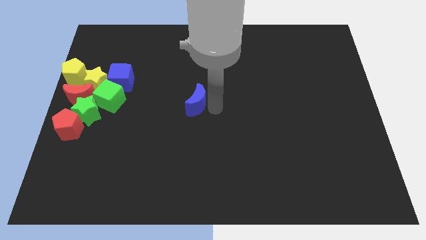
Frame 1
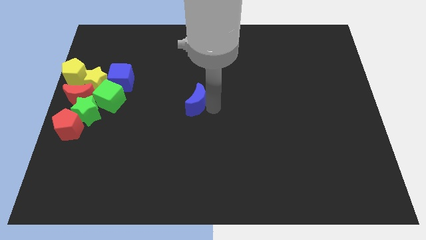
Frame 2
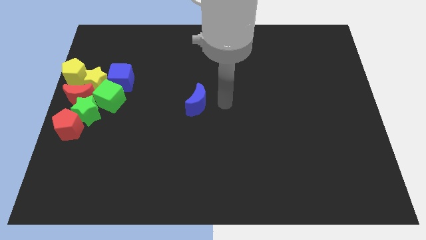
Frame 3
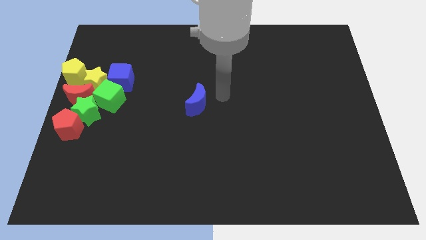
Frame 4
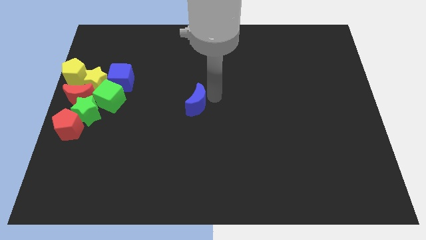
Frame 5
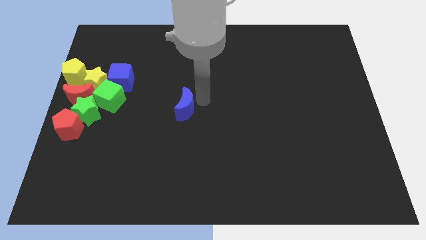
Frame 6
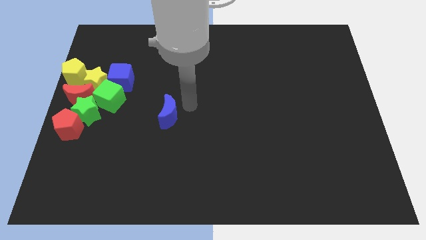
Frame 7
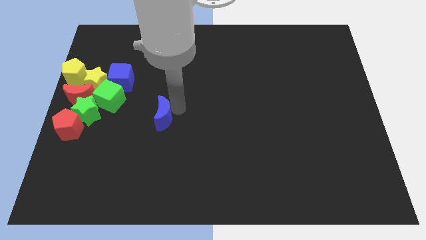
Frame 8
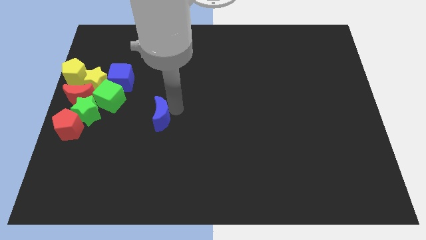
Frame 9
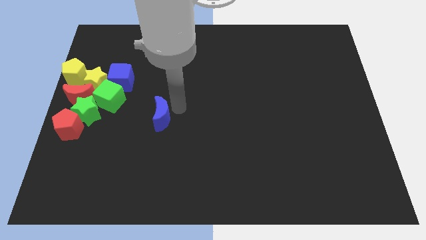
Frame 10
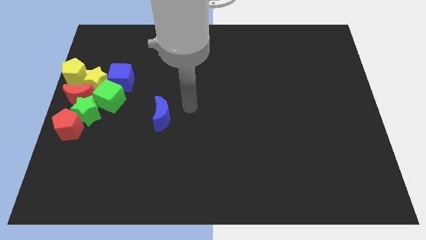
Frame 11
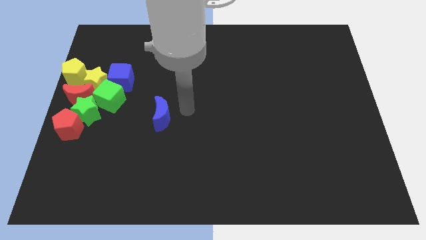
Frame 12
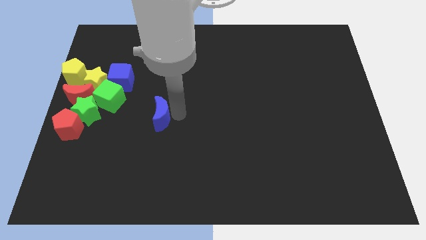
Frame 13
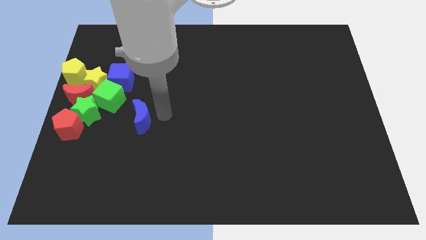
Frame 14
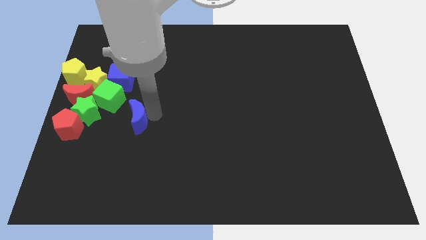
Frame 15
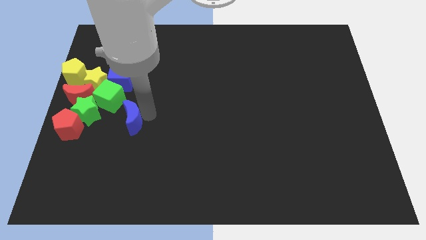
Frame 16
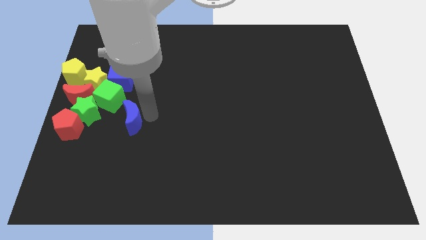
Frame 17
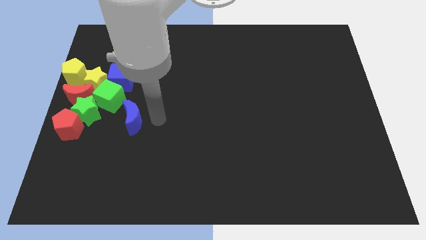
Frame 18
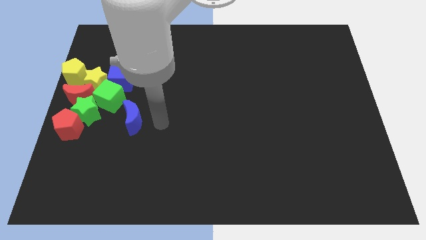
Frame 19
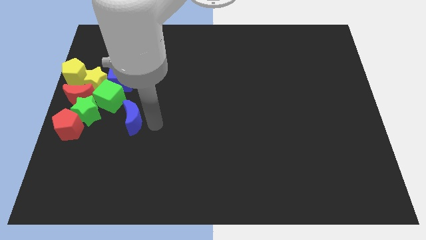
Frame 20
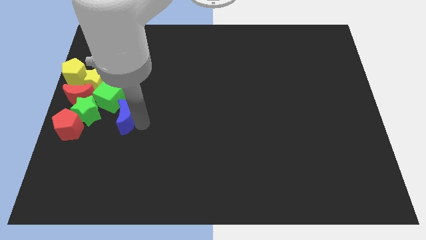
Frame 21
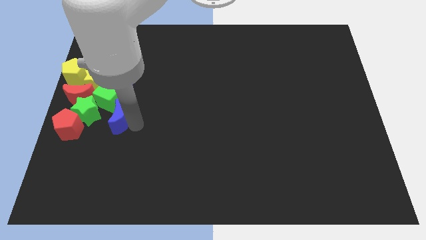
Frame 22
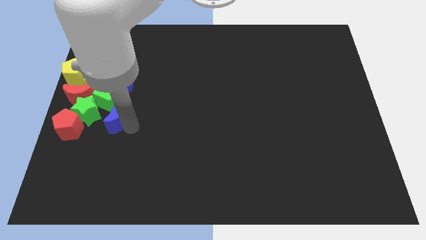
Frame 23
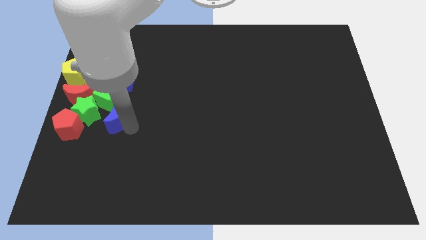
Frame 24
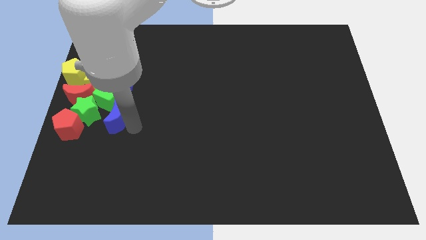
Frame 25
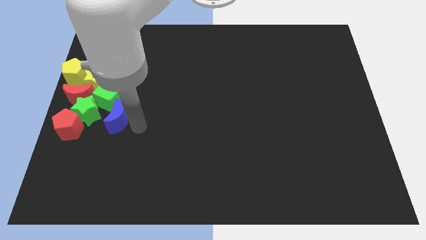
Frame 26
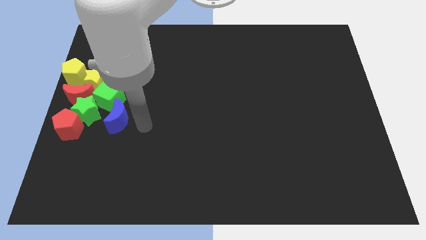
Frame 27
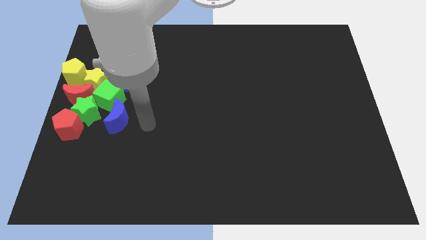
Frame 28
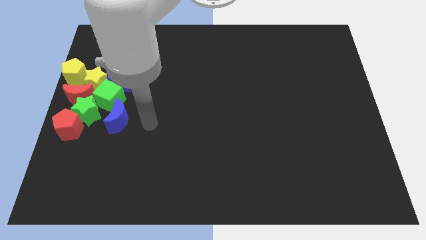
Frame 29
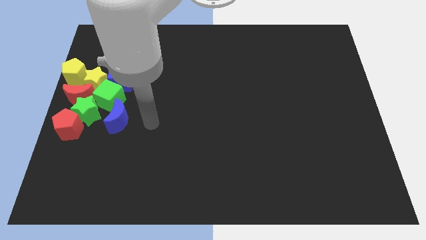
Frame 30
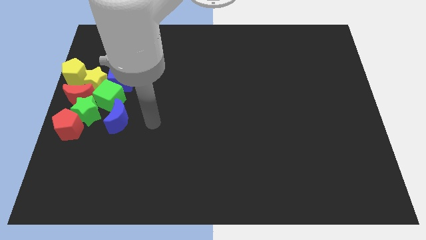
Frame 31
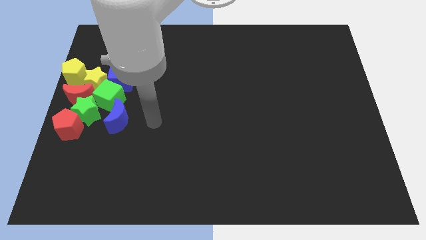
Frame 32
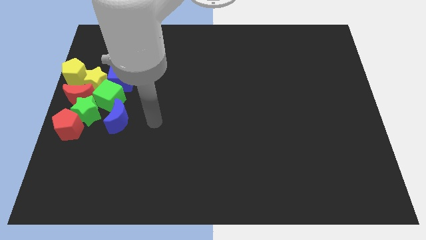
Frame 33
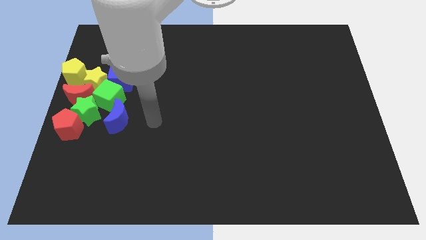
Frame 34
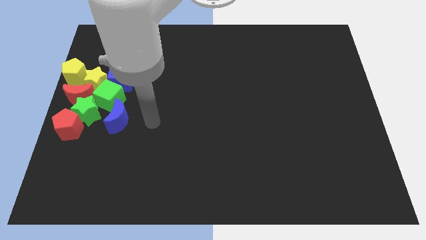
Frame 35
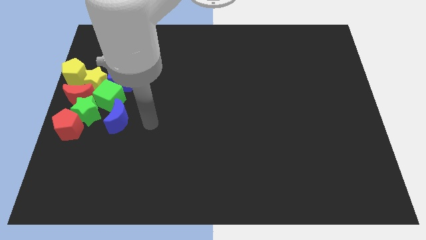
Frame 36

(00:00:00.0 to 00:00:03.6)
push the blue crescent close to the green cube

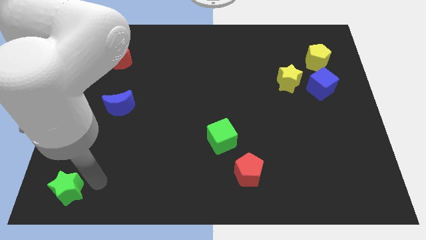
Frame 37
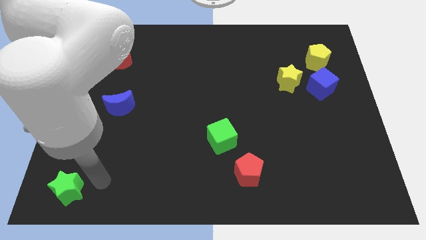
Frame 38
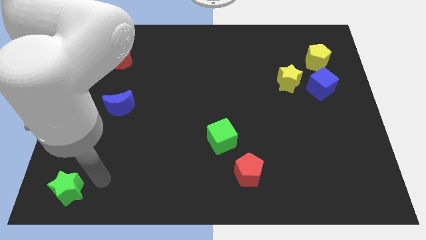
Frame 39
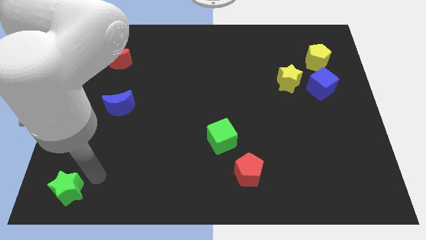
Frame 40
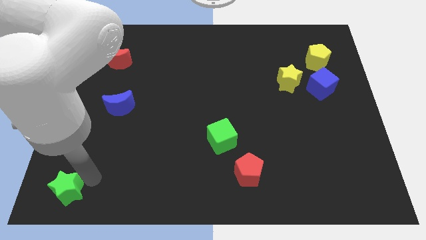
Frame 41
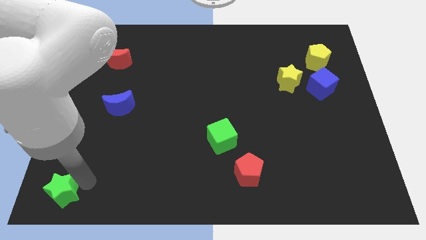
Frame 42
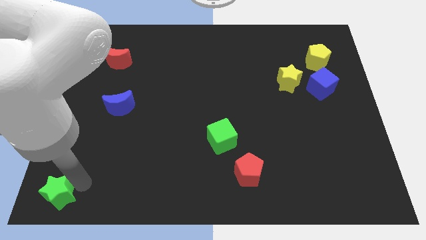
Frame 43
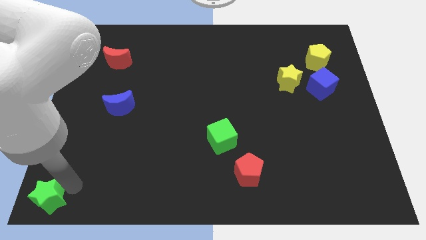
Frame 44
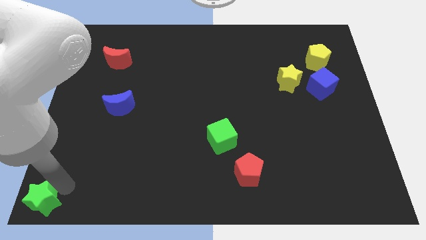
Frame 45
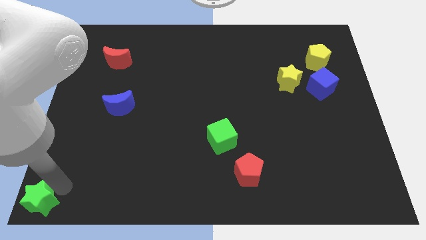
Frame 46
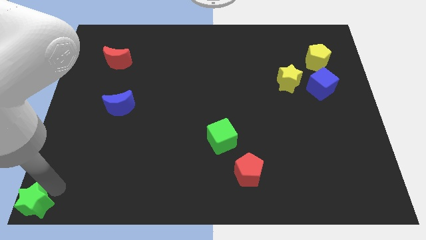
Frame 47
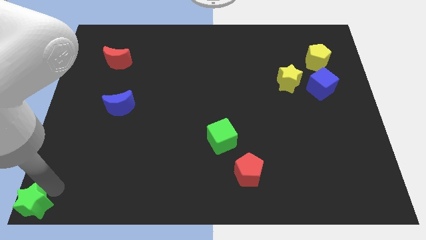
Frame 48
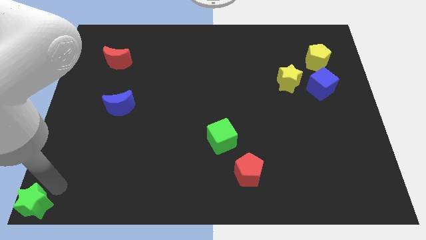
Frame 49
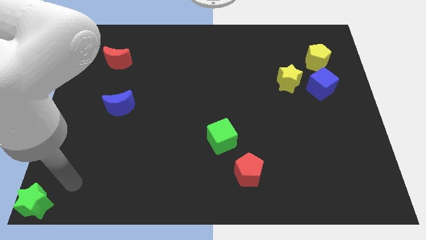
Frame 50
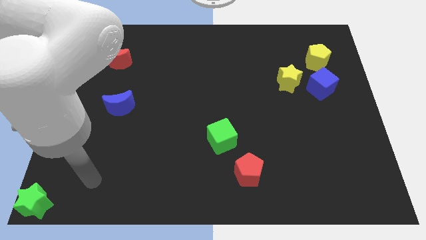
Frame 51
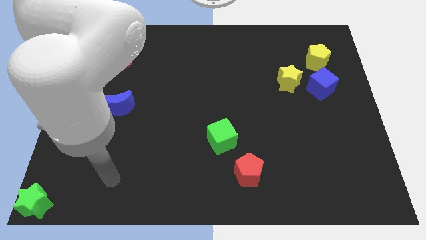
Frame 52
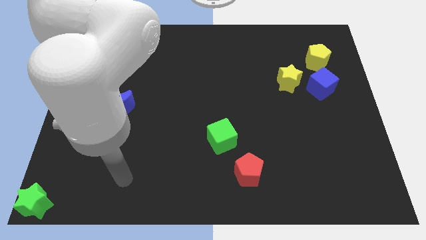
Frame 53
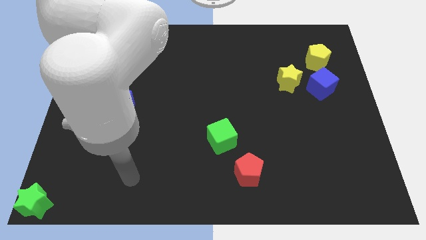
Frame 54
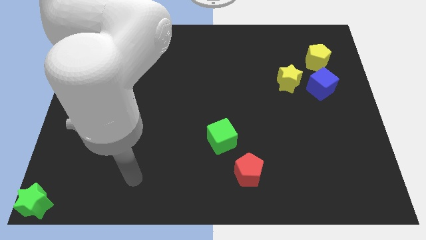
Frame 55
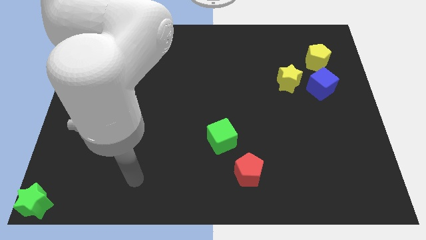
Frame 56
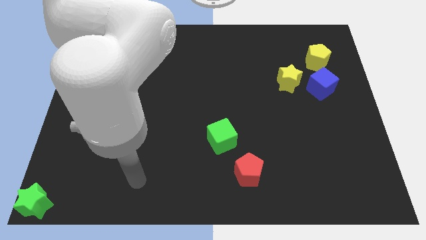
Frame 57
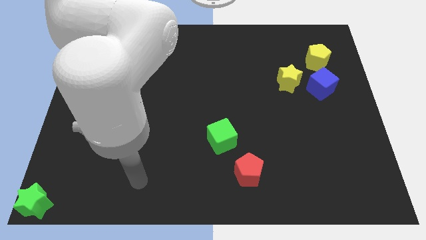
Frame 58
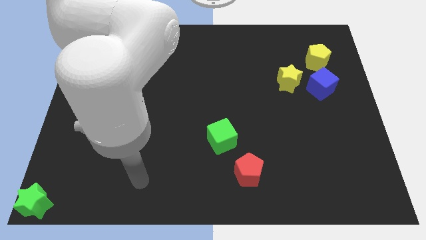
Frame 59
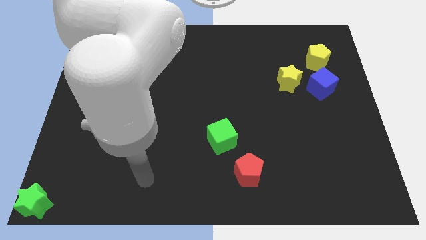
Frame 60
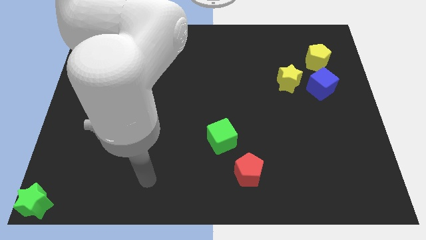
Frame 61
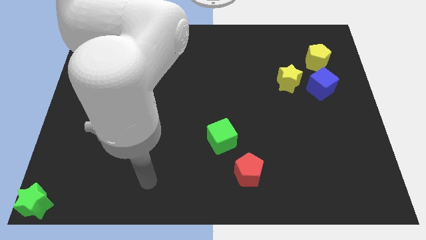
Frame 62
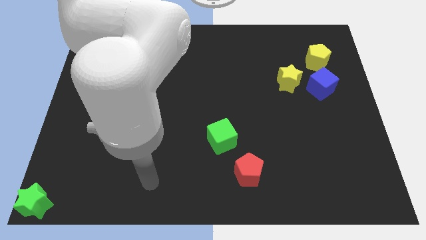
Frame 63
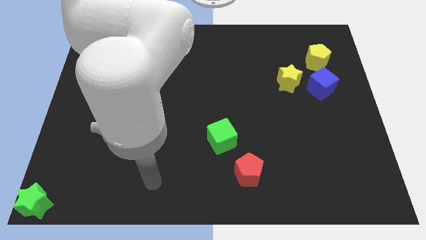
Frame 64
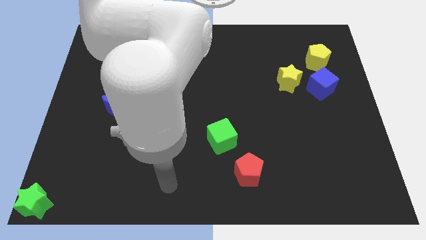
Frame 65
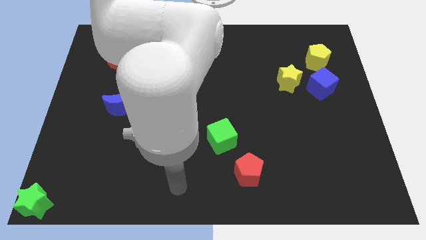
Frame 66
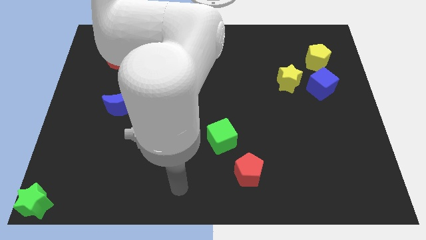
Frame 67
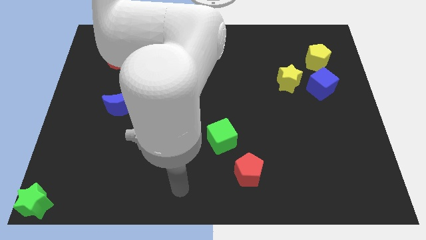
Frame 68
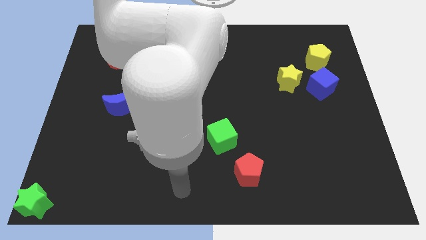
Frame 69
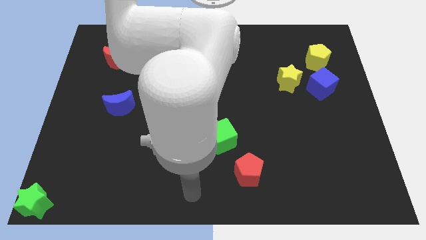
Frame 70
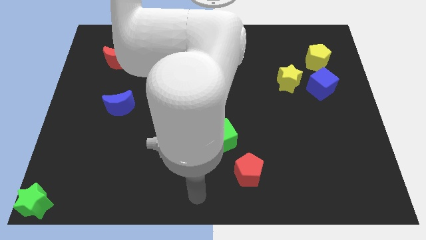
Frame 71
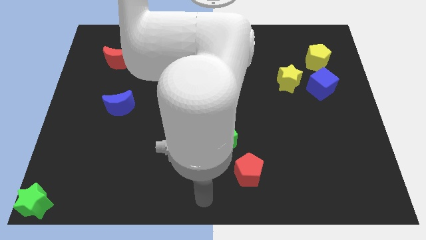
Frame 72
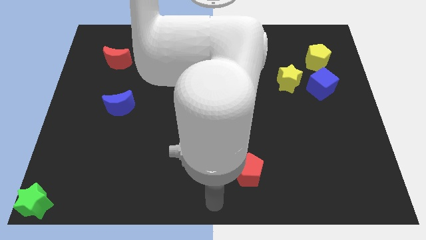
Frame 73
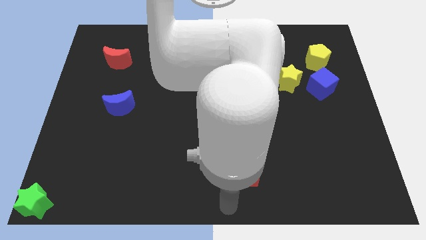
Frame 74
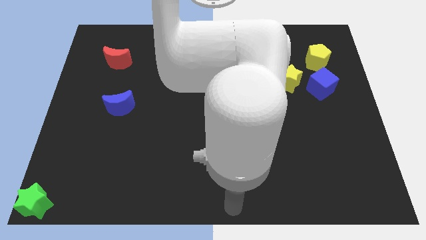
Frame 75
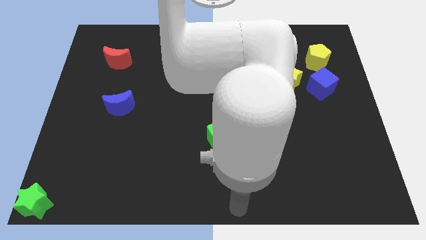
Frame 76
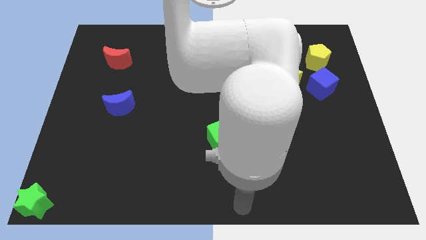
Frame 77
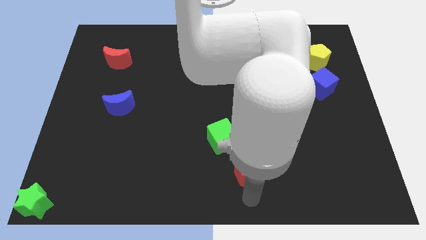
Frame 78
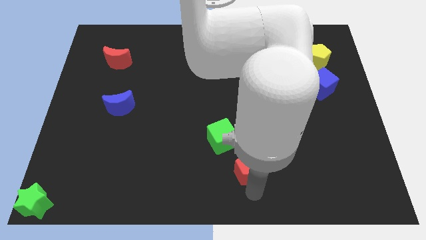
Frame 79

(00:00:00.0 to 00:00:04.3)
place your hand below the red pentagon

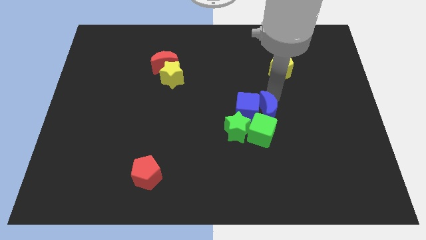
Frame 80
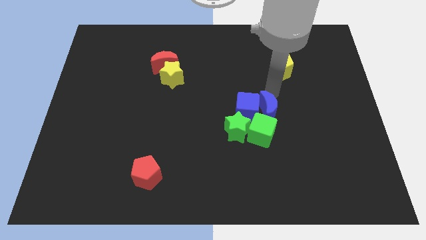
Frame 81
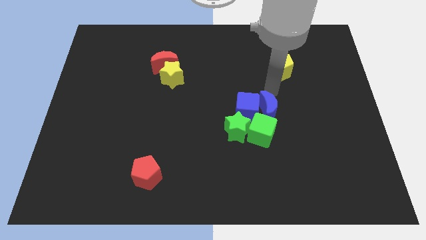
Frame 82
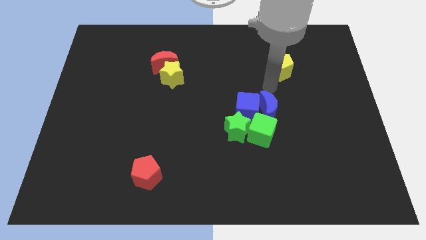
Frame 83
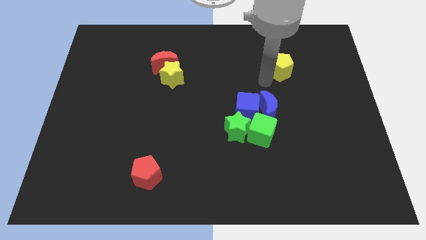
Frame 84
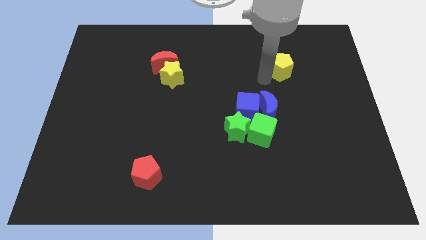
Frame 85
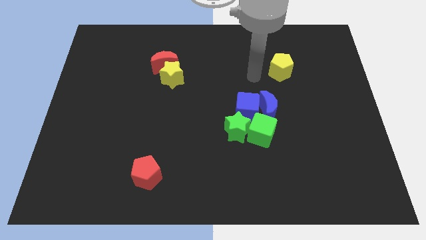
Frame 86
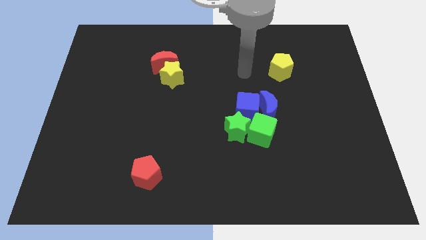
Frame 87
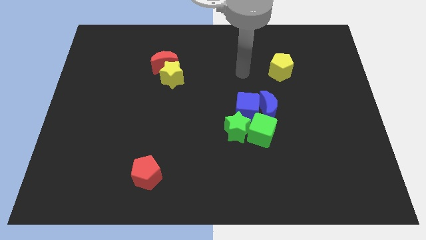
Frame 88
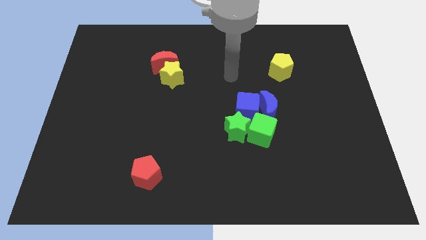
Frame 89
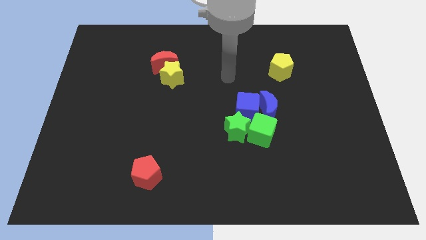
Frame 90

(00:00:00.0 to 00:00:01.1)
place your arm in between the yellow star and yellow pentagon
